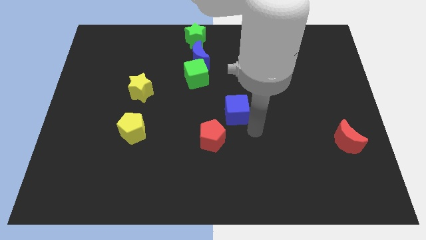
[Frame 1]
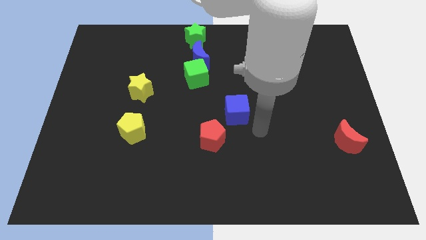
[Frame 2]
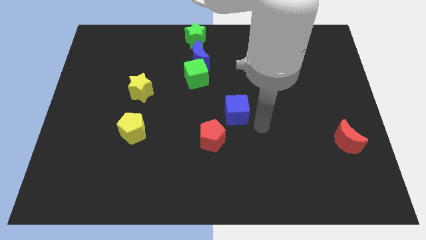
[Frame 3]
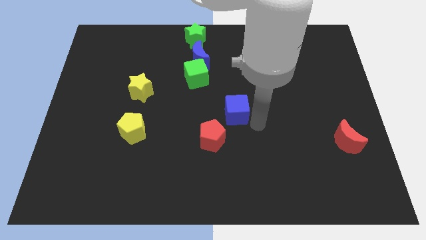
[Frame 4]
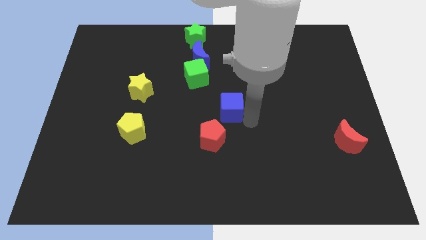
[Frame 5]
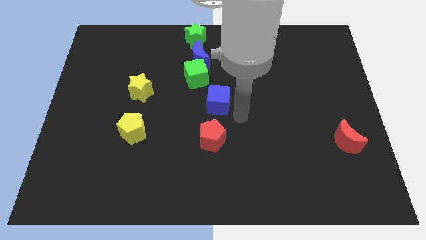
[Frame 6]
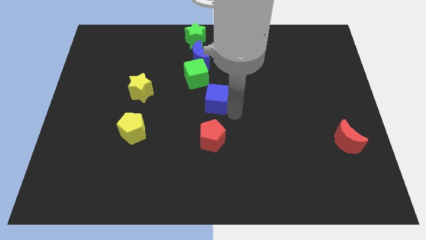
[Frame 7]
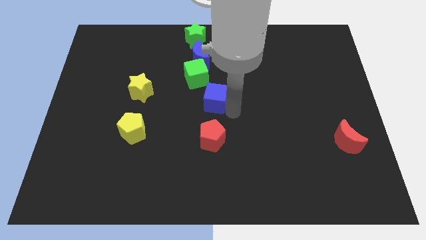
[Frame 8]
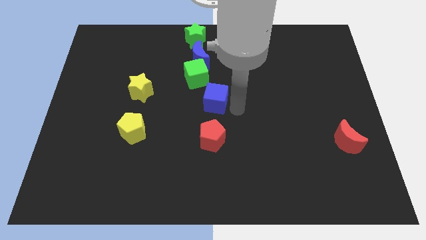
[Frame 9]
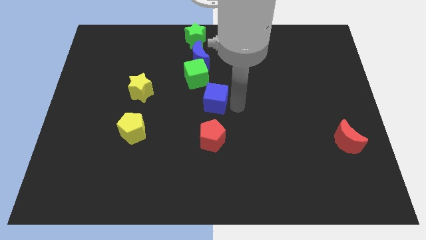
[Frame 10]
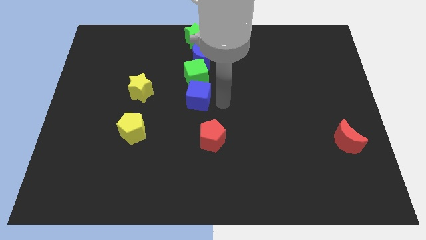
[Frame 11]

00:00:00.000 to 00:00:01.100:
place blue cube at the bottom of green cube

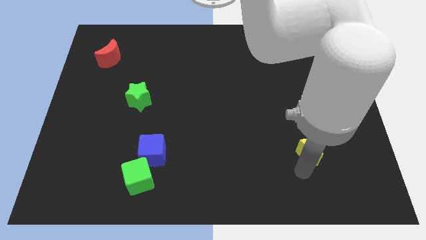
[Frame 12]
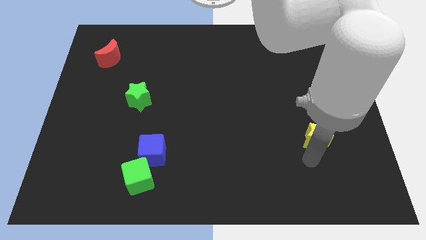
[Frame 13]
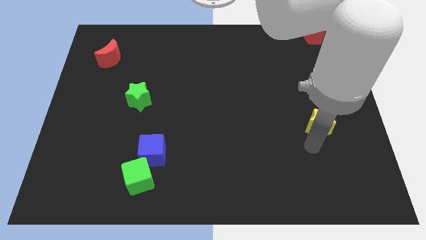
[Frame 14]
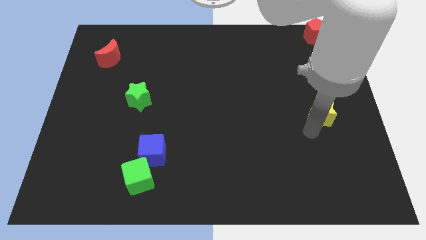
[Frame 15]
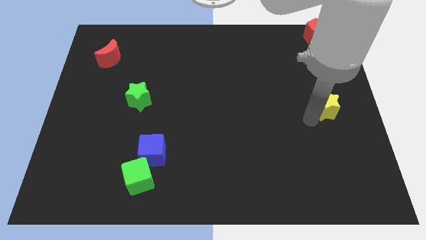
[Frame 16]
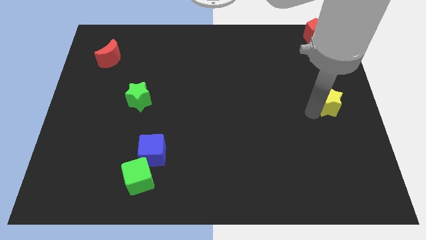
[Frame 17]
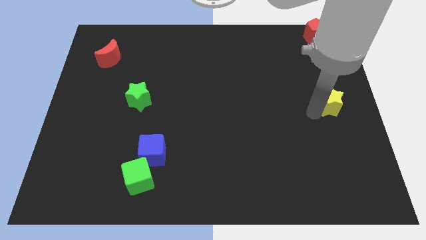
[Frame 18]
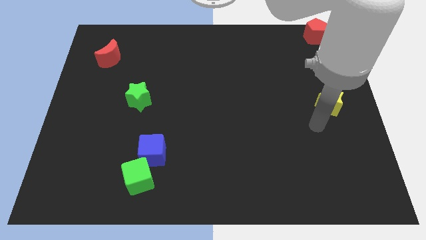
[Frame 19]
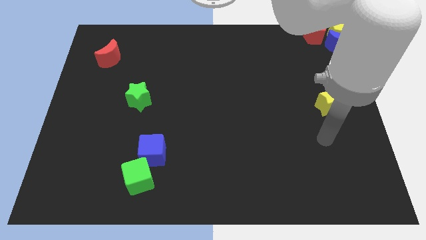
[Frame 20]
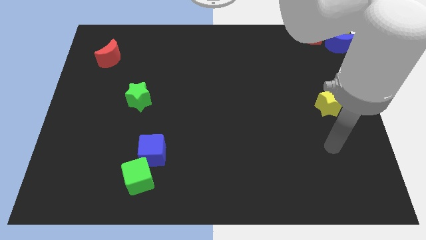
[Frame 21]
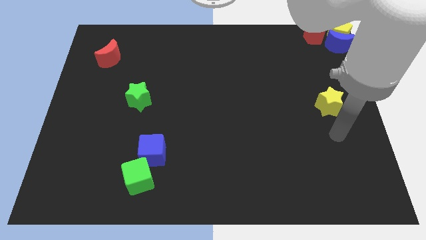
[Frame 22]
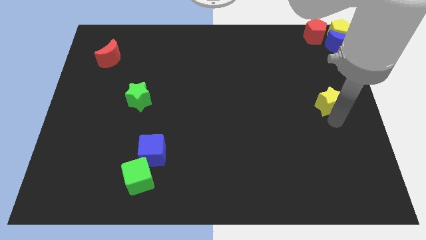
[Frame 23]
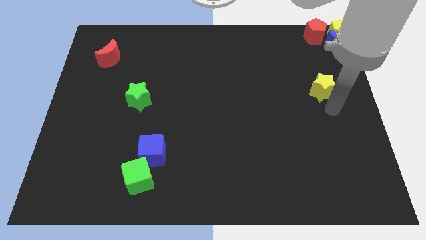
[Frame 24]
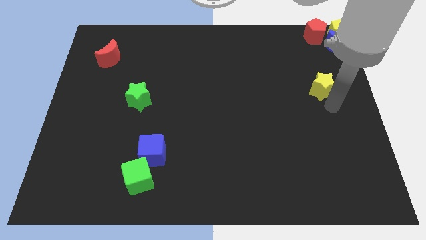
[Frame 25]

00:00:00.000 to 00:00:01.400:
push the yellow star to the top of the board

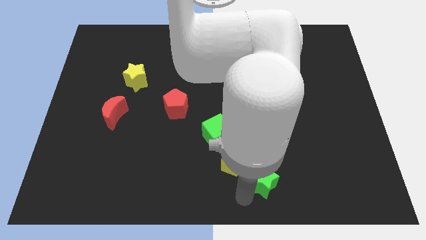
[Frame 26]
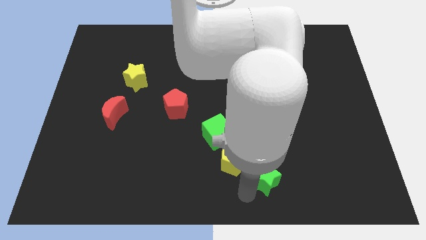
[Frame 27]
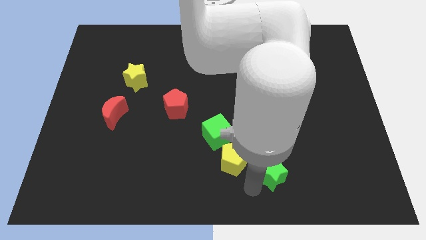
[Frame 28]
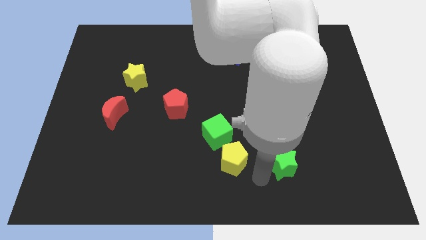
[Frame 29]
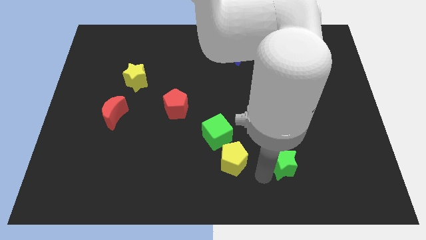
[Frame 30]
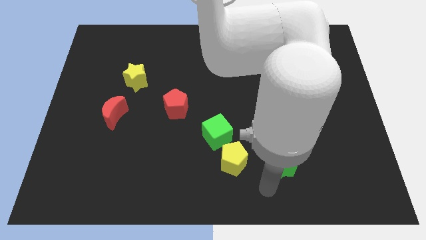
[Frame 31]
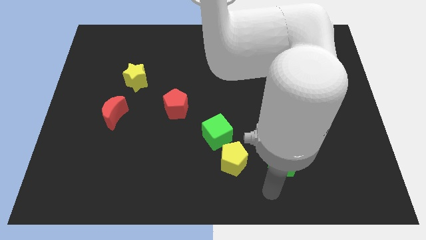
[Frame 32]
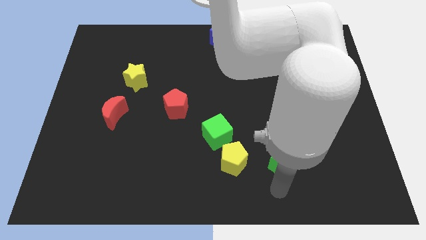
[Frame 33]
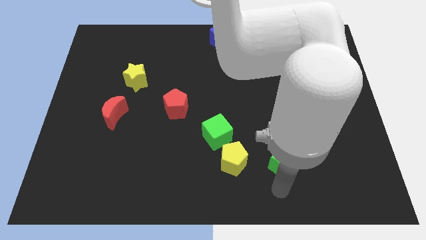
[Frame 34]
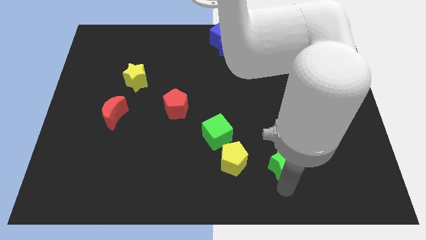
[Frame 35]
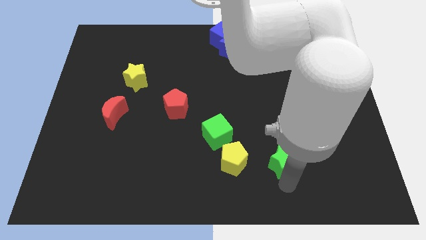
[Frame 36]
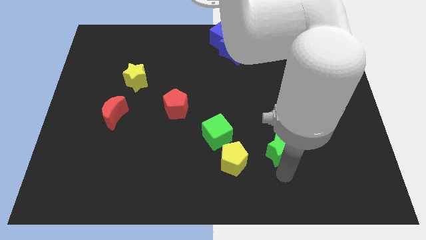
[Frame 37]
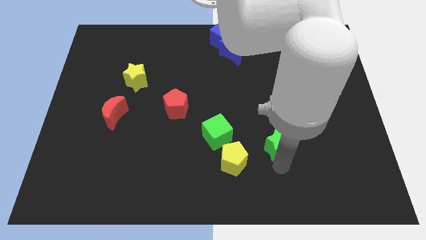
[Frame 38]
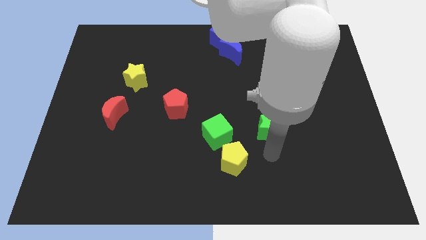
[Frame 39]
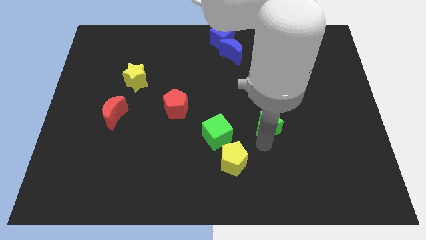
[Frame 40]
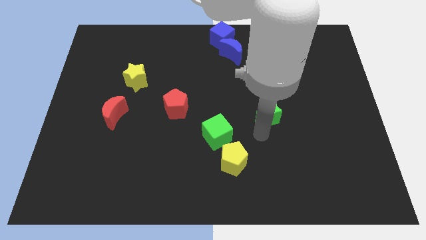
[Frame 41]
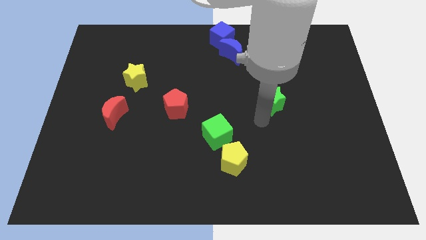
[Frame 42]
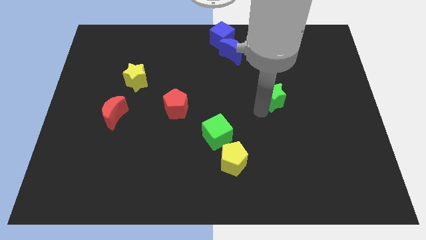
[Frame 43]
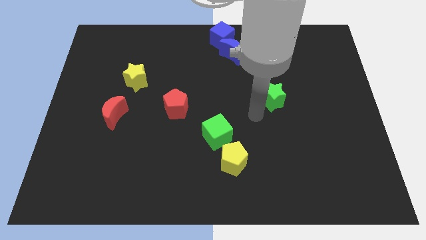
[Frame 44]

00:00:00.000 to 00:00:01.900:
move the green star slightly to the top side of the board

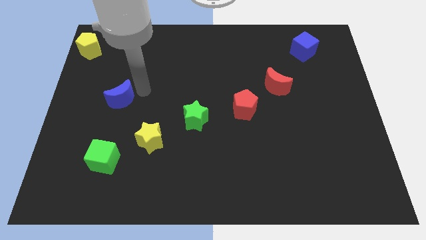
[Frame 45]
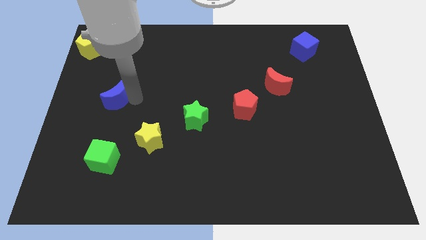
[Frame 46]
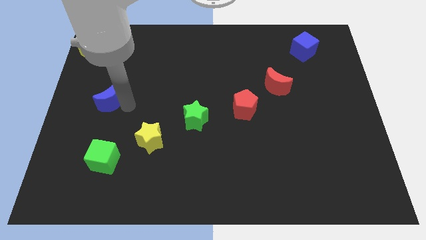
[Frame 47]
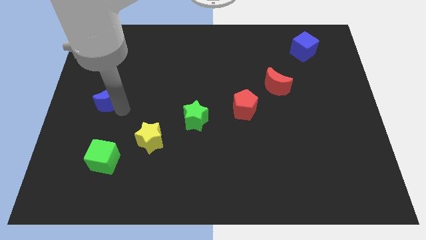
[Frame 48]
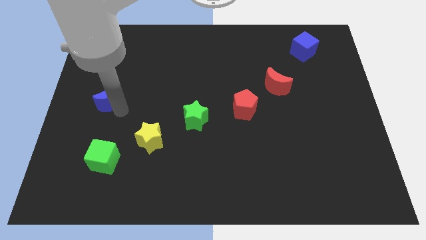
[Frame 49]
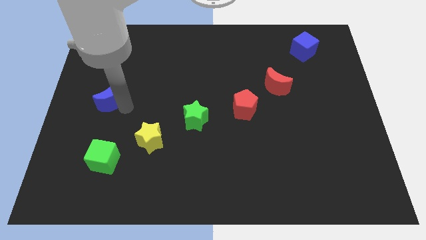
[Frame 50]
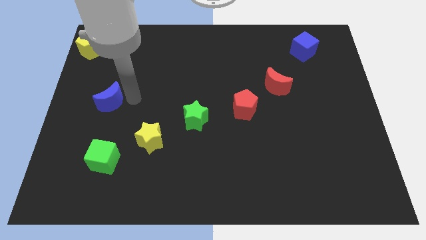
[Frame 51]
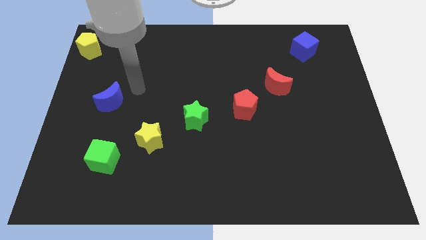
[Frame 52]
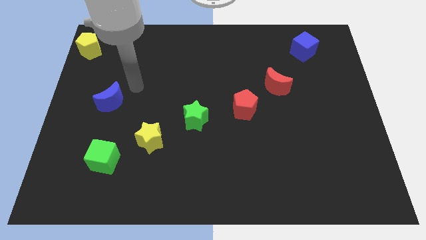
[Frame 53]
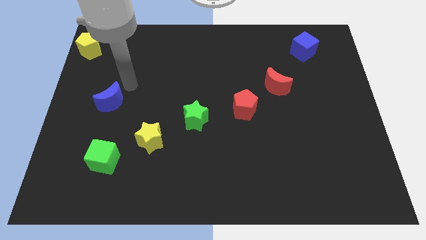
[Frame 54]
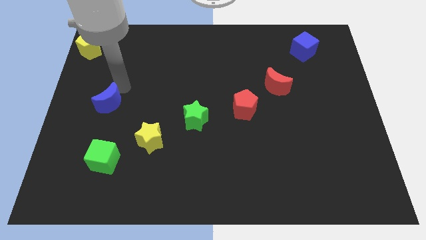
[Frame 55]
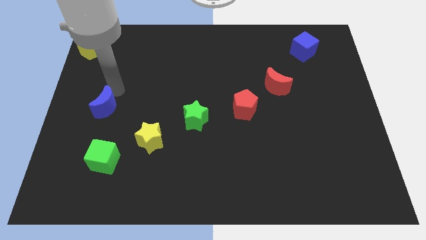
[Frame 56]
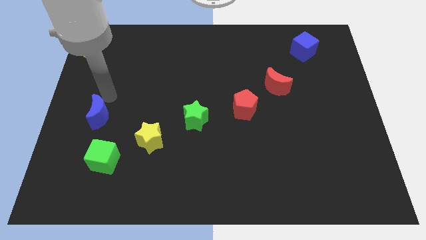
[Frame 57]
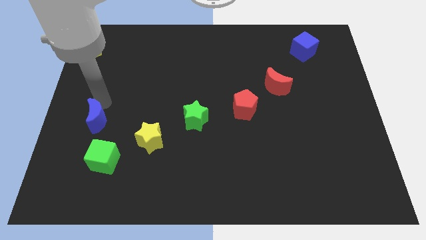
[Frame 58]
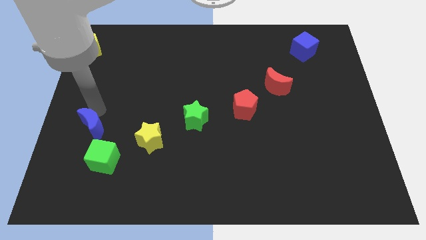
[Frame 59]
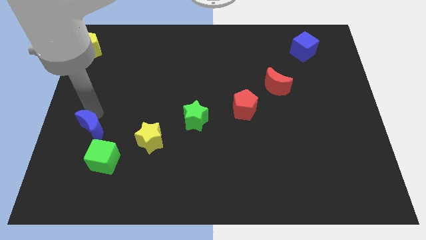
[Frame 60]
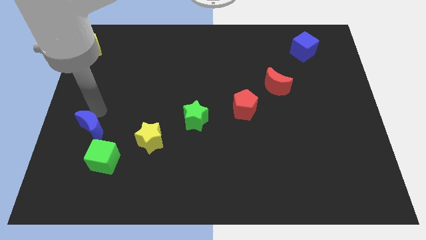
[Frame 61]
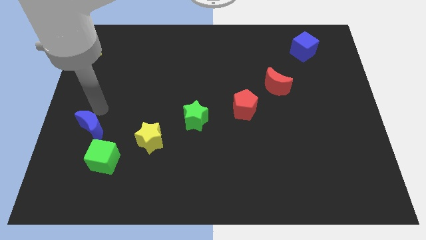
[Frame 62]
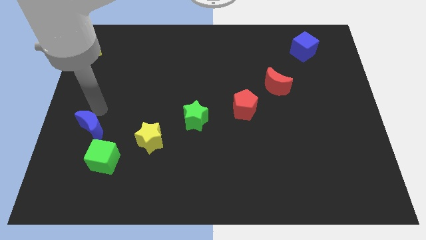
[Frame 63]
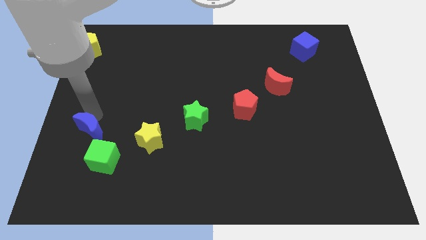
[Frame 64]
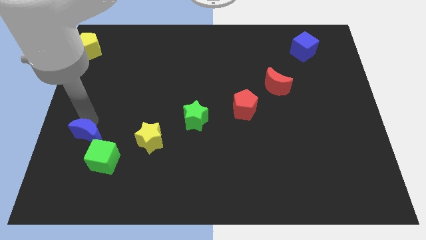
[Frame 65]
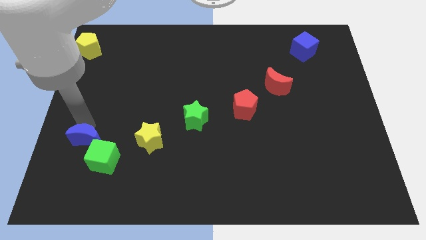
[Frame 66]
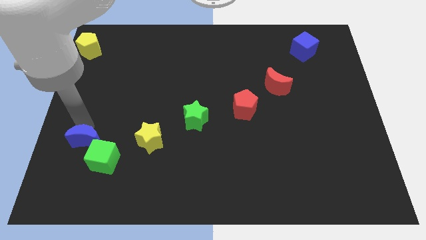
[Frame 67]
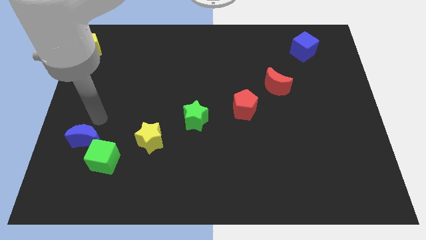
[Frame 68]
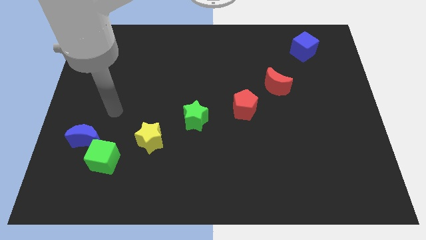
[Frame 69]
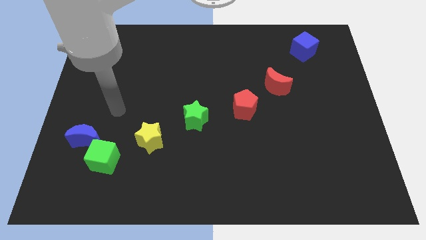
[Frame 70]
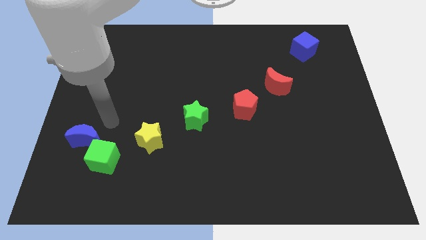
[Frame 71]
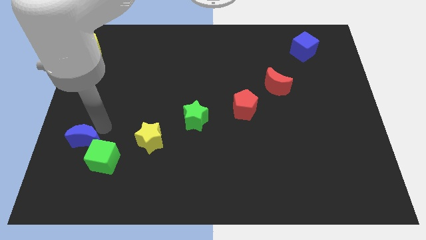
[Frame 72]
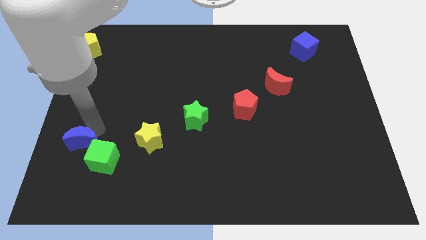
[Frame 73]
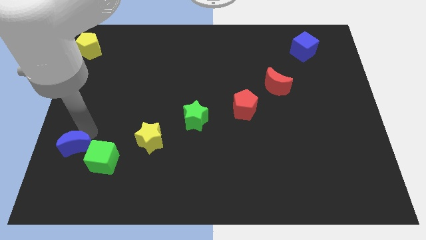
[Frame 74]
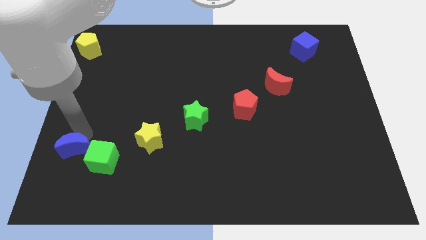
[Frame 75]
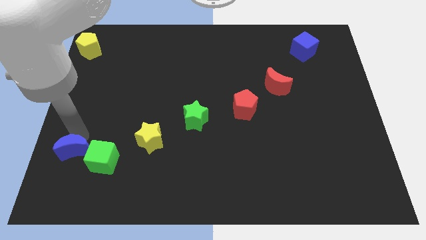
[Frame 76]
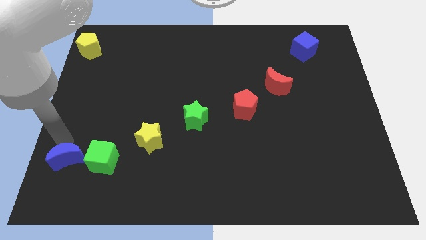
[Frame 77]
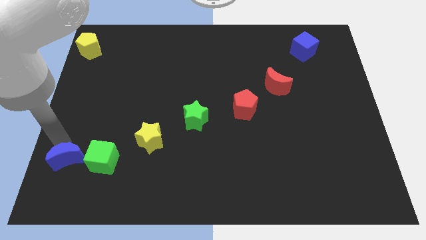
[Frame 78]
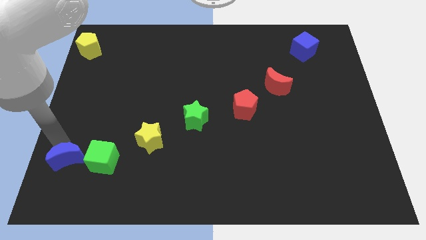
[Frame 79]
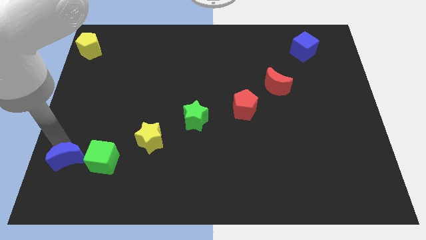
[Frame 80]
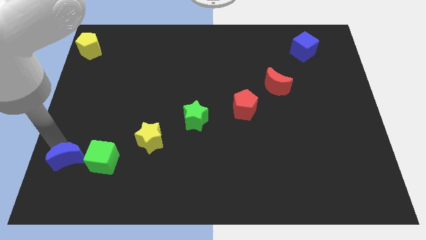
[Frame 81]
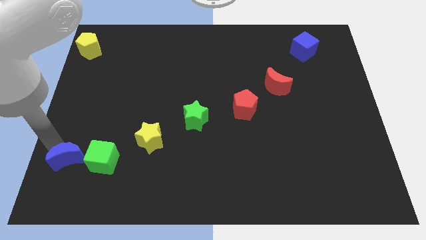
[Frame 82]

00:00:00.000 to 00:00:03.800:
place the blue moon left to the green cube

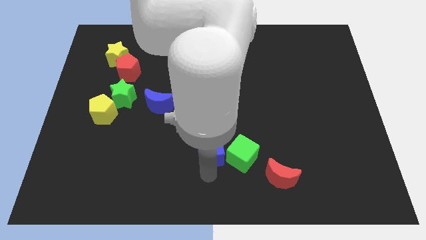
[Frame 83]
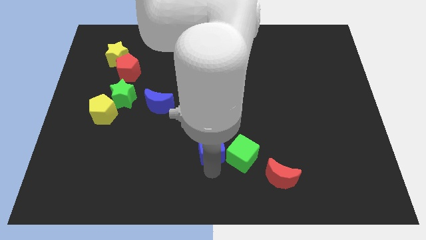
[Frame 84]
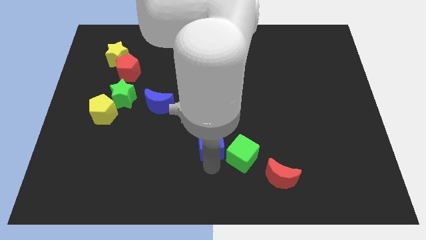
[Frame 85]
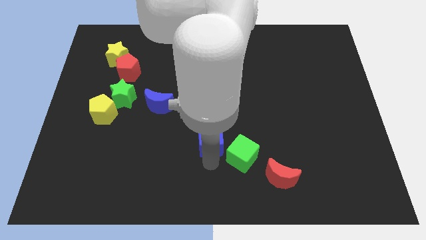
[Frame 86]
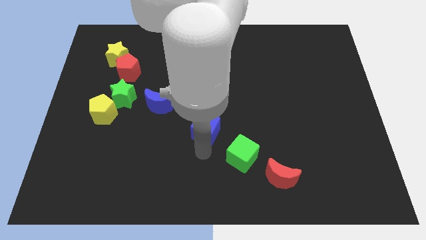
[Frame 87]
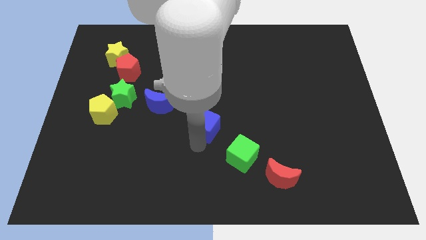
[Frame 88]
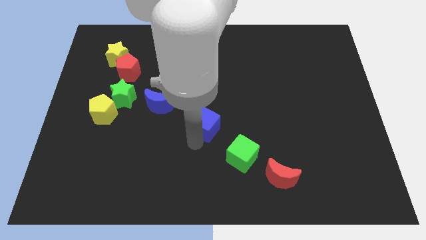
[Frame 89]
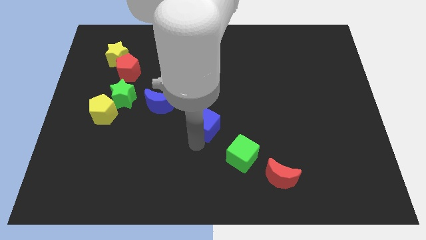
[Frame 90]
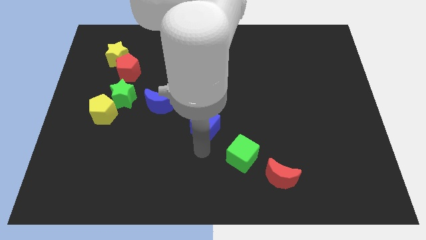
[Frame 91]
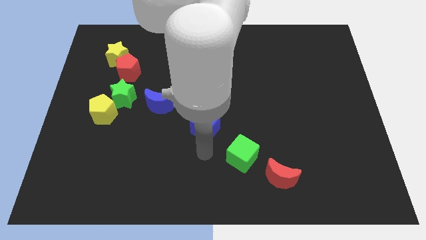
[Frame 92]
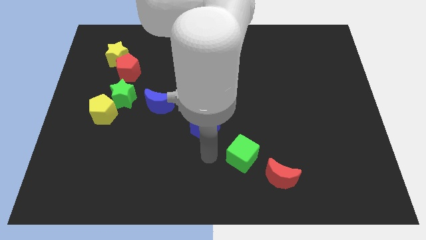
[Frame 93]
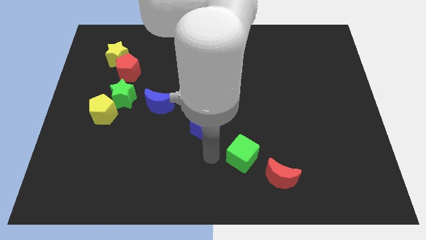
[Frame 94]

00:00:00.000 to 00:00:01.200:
put the blue cube diagonally in between the blue crescent and the green cube
